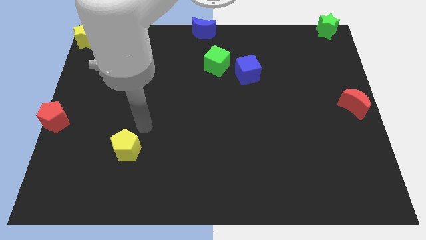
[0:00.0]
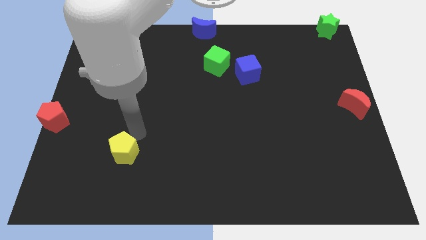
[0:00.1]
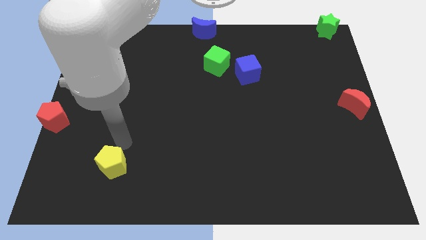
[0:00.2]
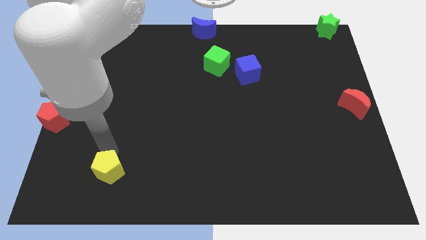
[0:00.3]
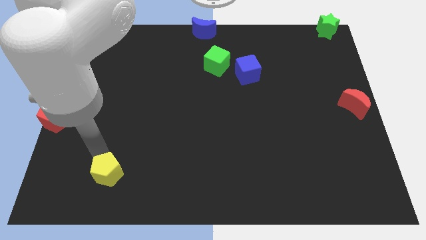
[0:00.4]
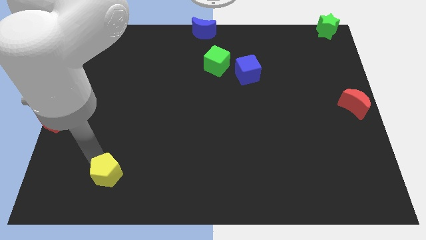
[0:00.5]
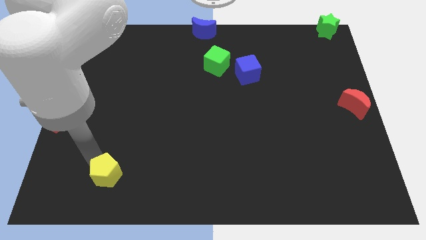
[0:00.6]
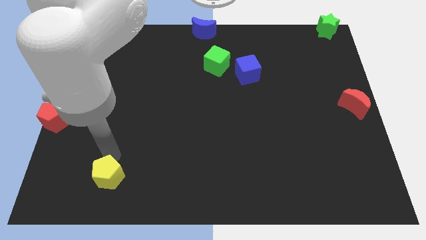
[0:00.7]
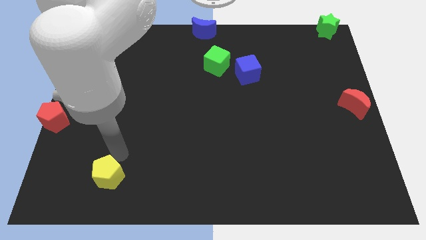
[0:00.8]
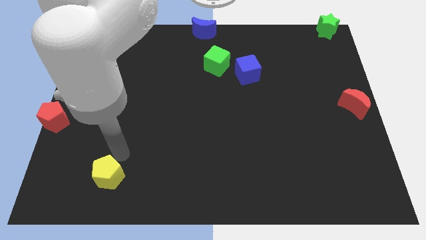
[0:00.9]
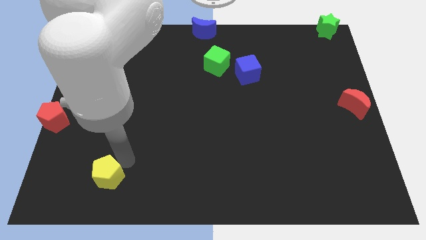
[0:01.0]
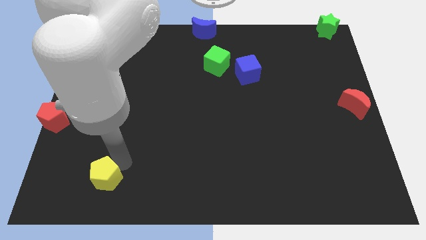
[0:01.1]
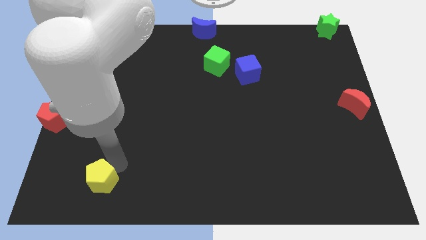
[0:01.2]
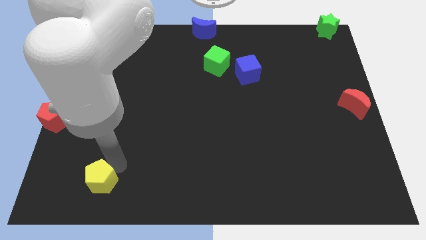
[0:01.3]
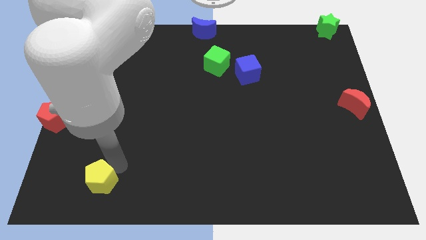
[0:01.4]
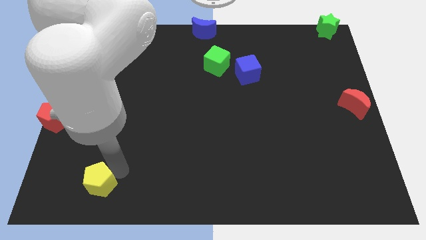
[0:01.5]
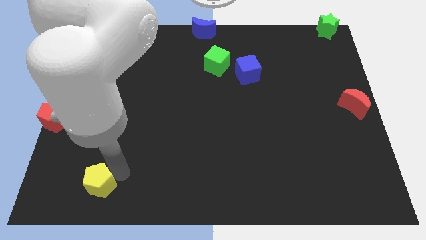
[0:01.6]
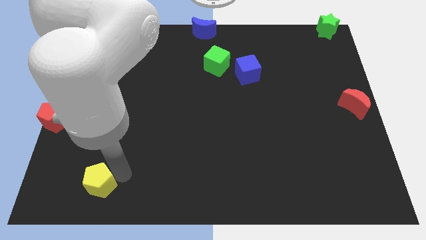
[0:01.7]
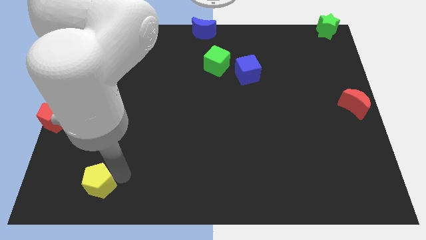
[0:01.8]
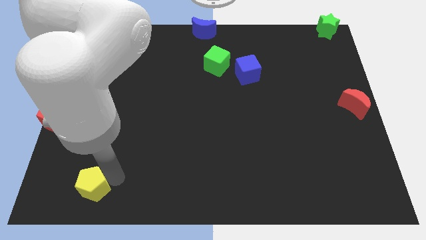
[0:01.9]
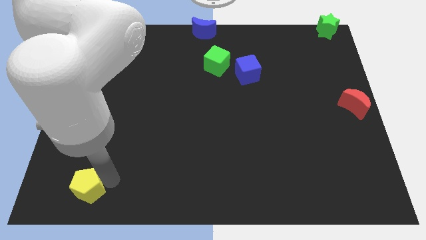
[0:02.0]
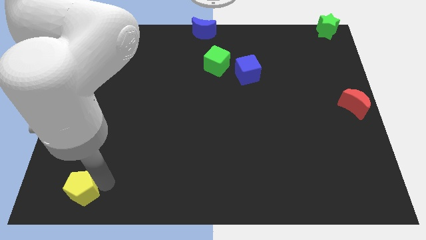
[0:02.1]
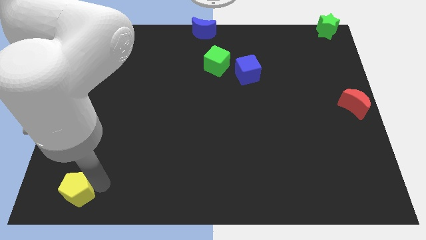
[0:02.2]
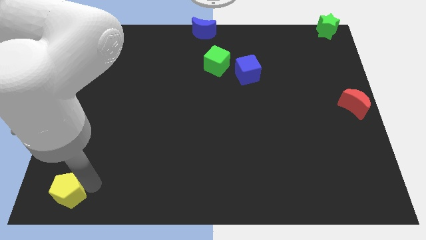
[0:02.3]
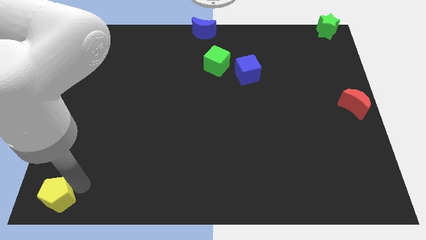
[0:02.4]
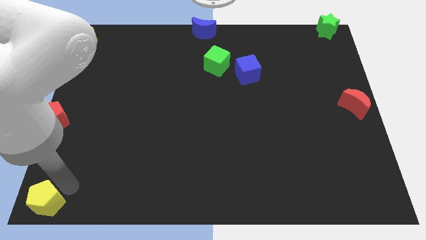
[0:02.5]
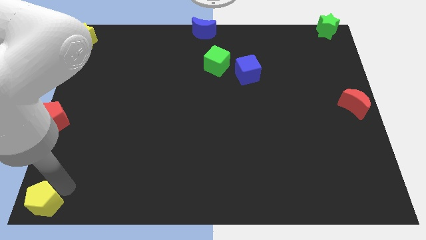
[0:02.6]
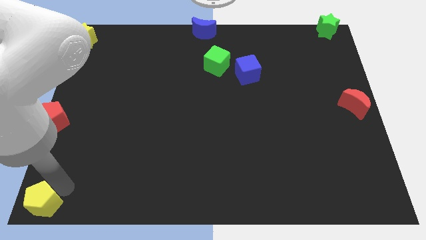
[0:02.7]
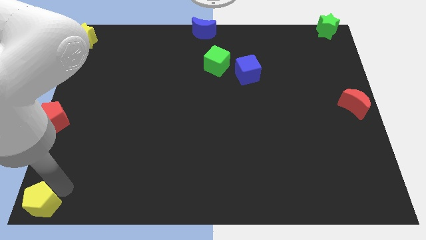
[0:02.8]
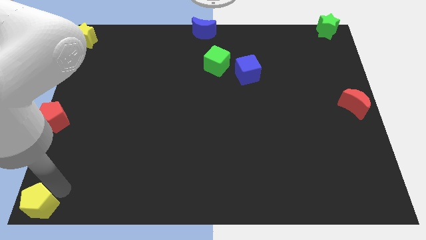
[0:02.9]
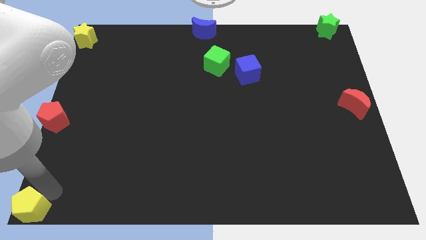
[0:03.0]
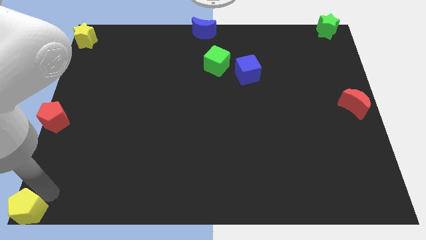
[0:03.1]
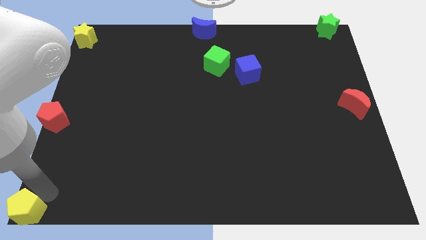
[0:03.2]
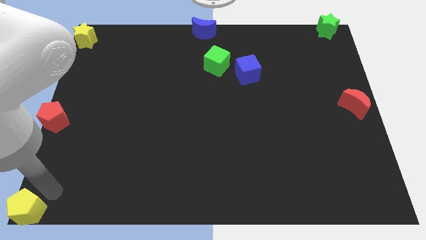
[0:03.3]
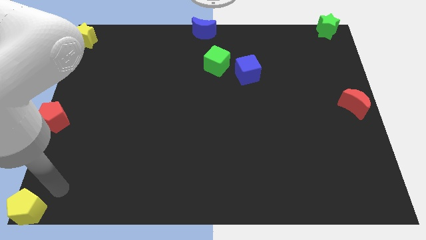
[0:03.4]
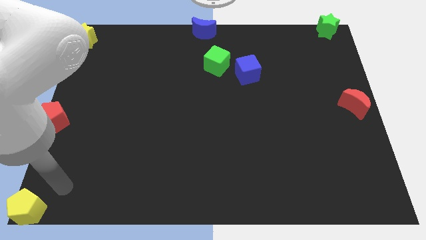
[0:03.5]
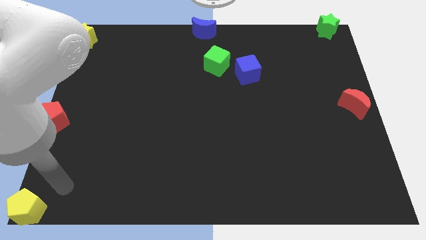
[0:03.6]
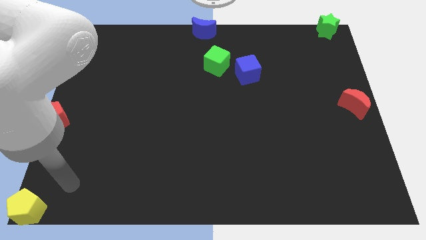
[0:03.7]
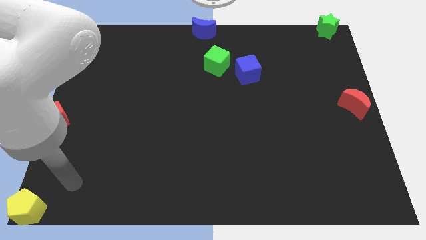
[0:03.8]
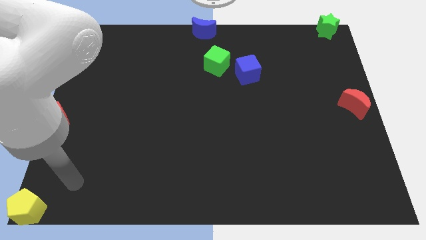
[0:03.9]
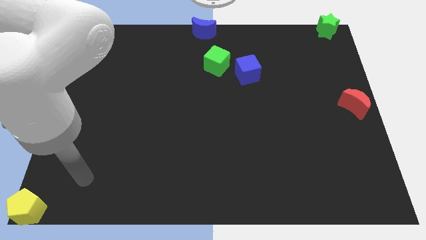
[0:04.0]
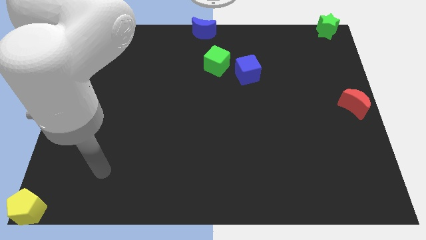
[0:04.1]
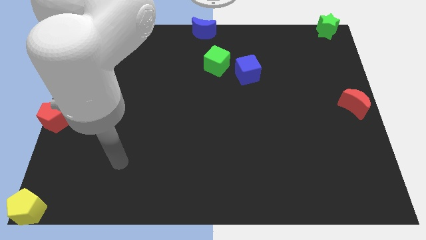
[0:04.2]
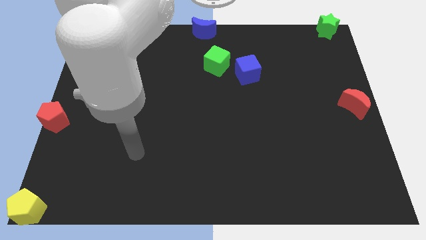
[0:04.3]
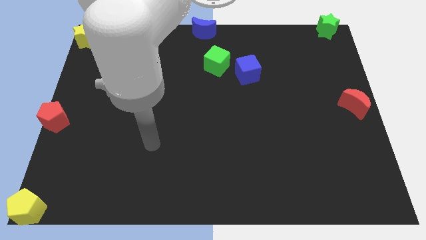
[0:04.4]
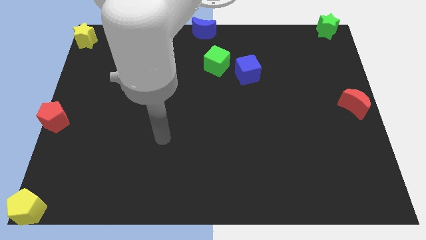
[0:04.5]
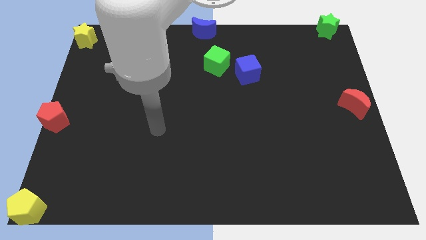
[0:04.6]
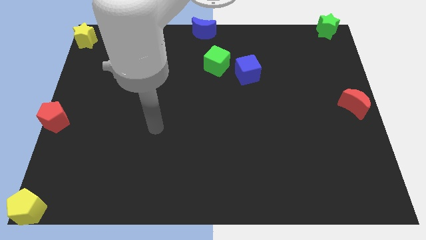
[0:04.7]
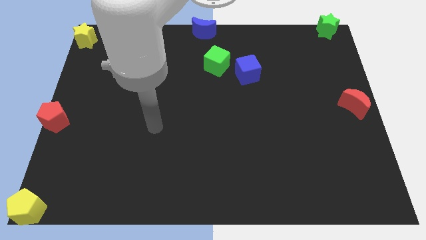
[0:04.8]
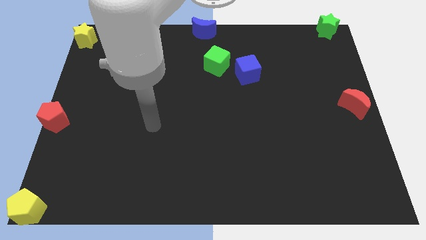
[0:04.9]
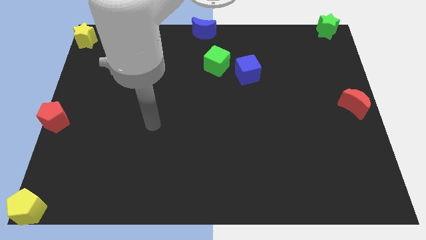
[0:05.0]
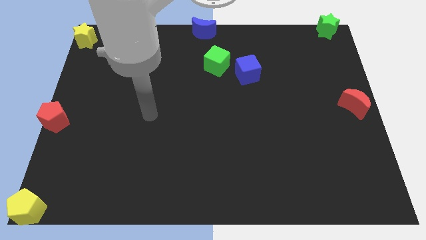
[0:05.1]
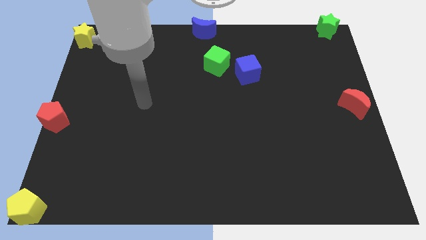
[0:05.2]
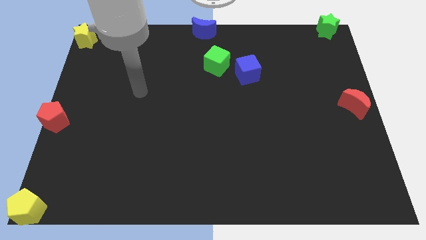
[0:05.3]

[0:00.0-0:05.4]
slide the yellow pentagon to bottom left corner of the board

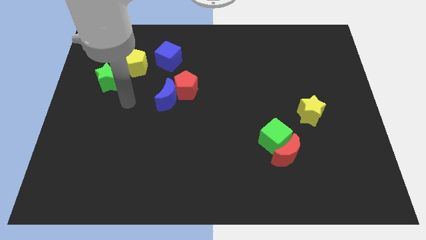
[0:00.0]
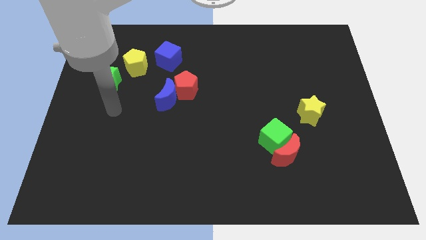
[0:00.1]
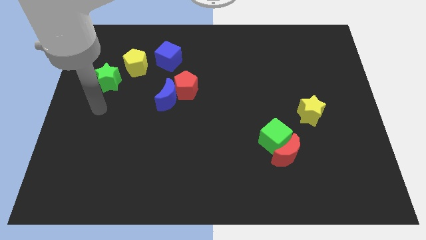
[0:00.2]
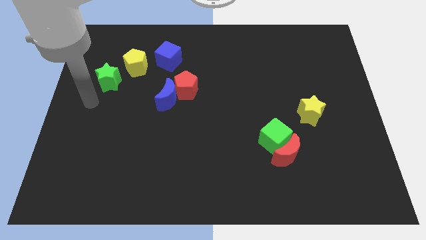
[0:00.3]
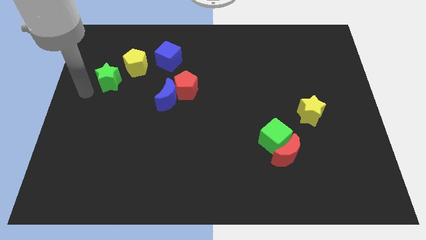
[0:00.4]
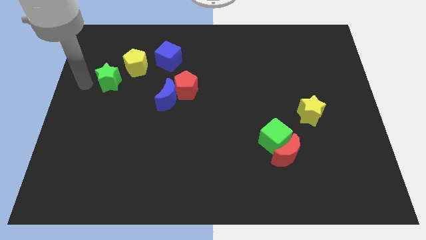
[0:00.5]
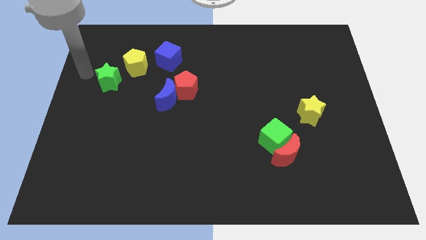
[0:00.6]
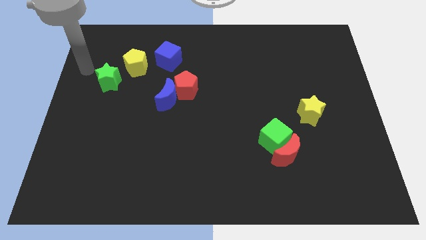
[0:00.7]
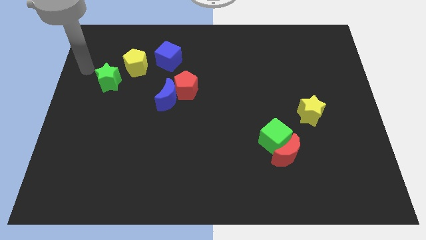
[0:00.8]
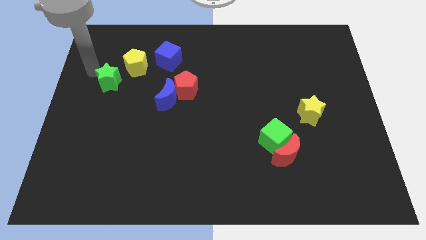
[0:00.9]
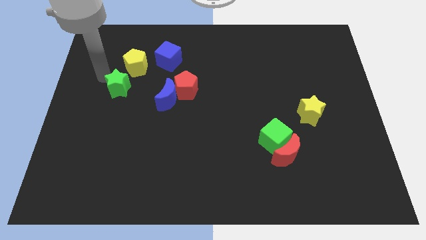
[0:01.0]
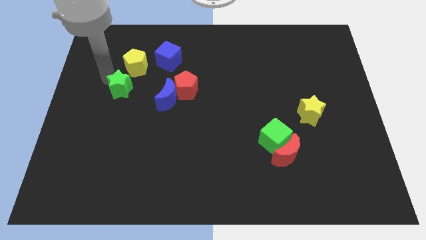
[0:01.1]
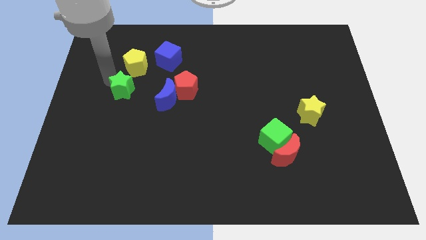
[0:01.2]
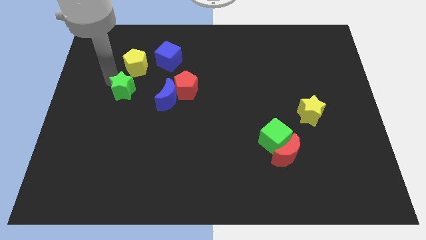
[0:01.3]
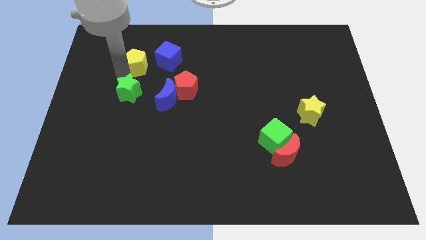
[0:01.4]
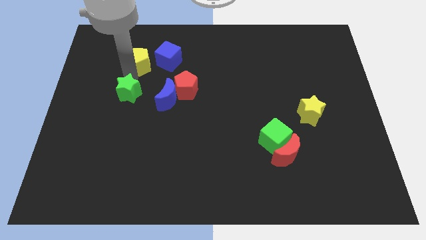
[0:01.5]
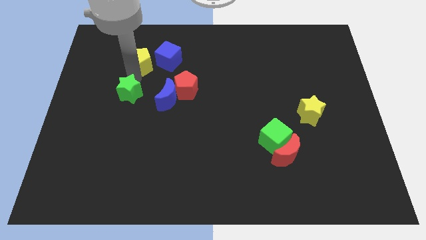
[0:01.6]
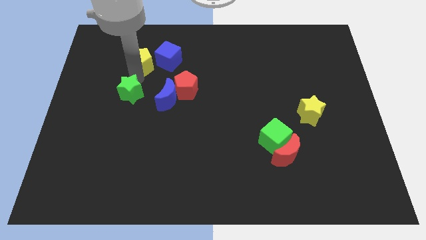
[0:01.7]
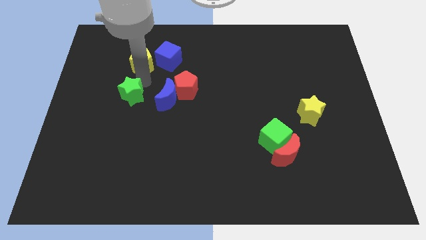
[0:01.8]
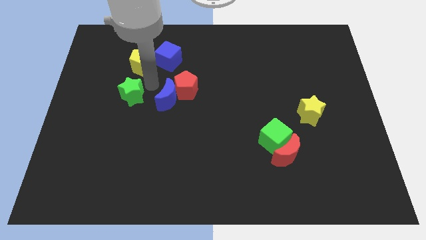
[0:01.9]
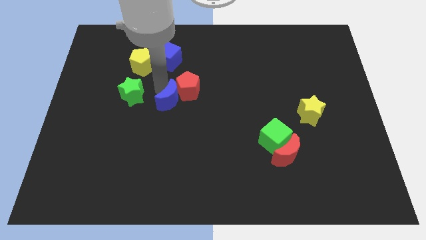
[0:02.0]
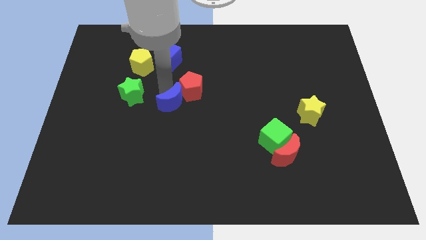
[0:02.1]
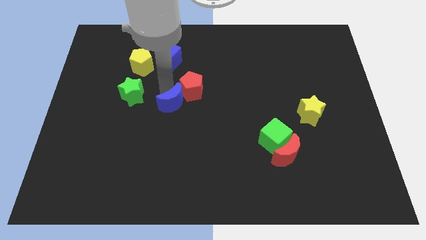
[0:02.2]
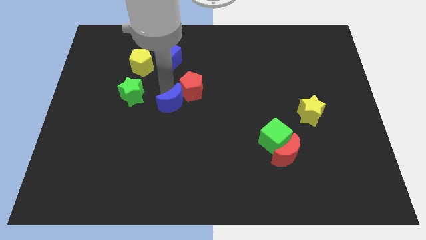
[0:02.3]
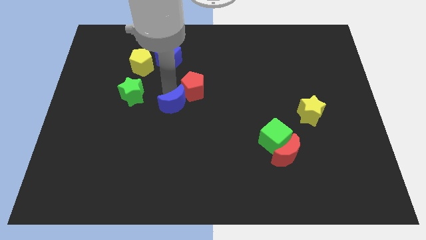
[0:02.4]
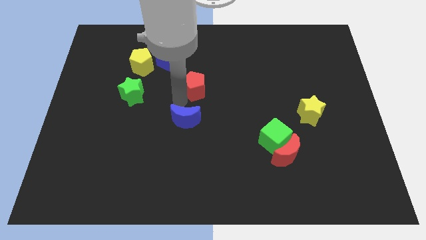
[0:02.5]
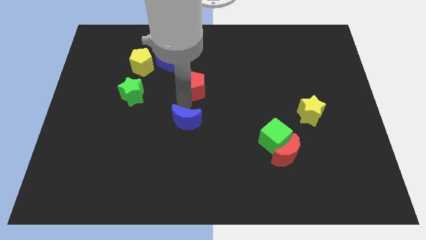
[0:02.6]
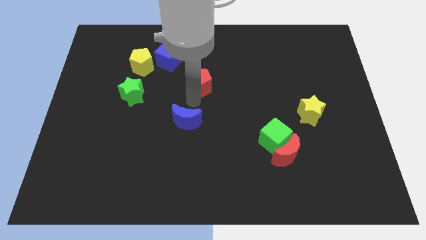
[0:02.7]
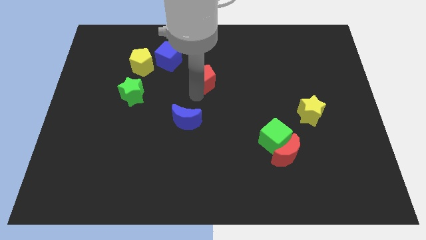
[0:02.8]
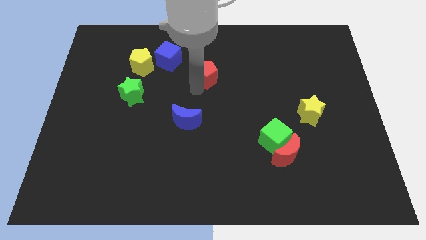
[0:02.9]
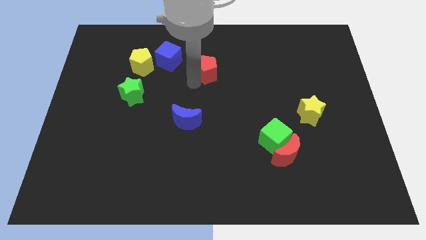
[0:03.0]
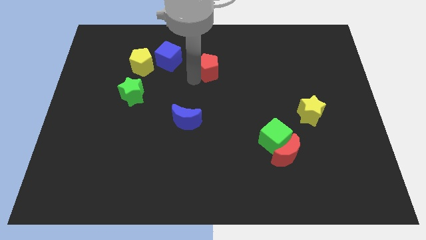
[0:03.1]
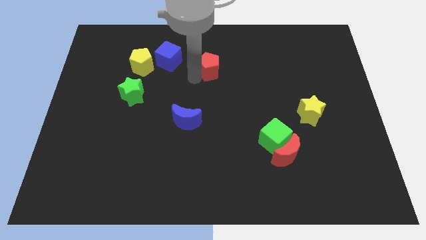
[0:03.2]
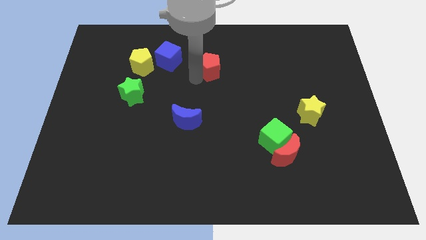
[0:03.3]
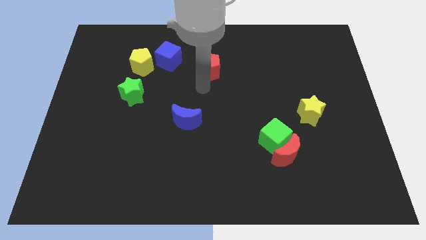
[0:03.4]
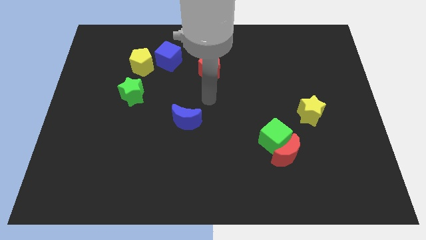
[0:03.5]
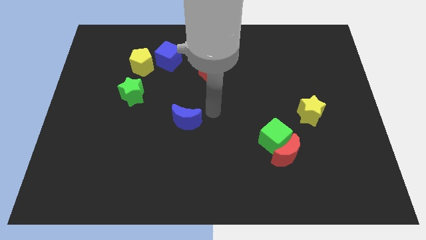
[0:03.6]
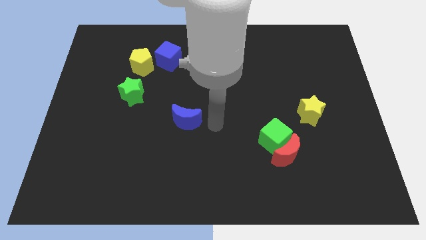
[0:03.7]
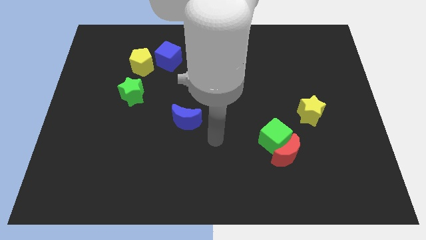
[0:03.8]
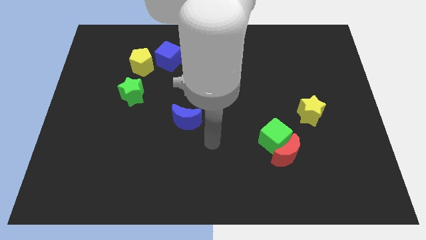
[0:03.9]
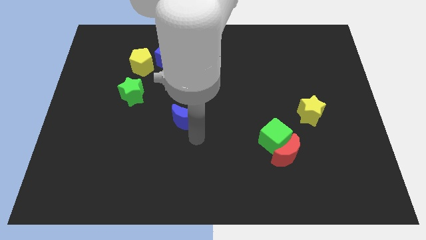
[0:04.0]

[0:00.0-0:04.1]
separate the green star yellow pentagon blue crescent and the red pentagon
